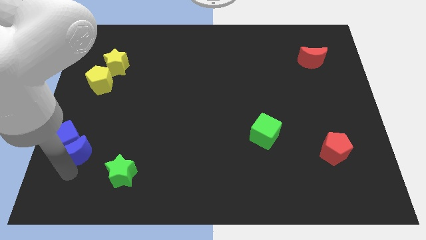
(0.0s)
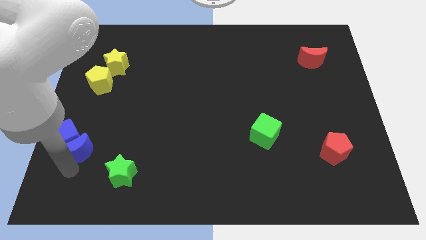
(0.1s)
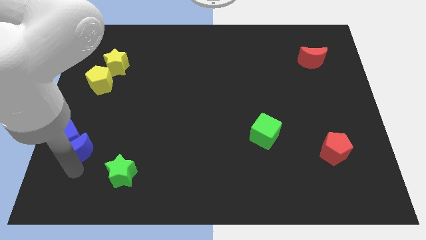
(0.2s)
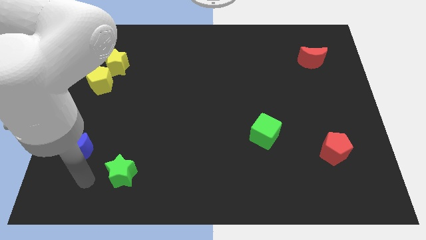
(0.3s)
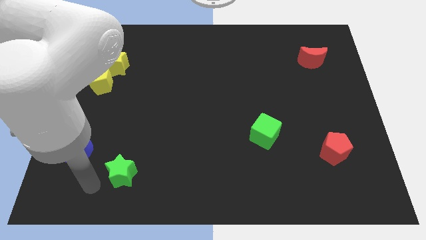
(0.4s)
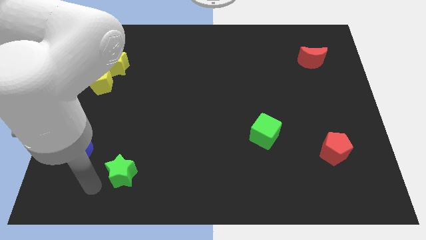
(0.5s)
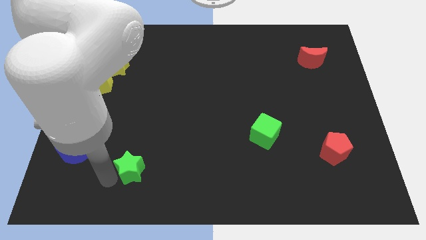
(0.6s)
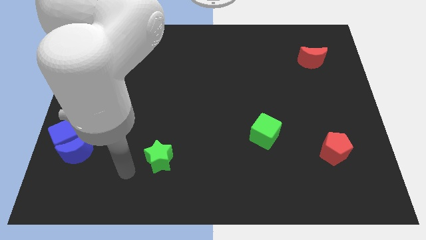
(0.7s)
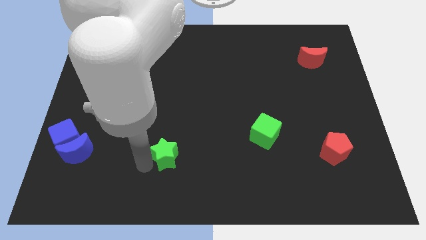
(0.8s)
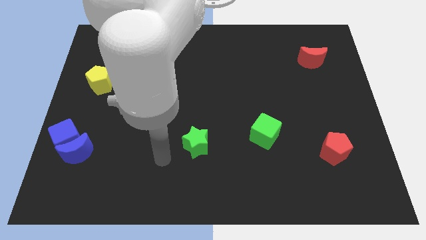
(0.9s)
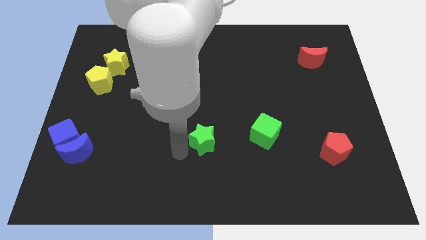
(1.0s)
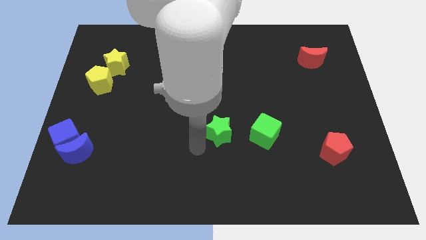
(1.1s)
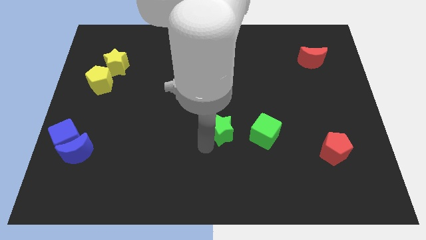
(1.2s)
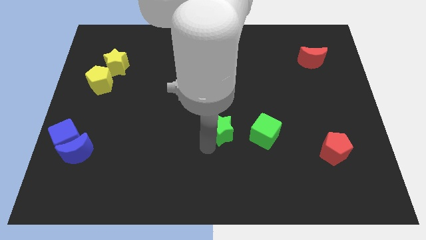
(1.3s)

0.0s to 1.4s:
move the green star left to the green cube

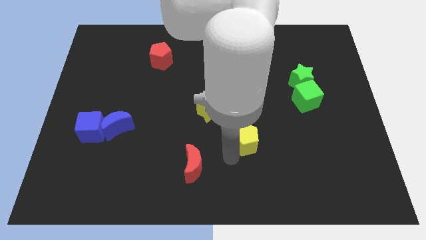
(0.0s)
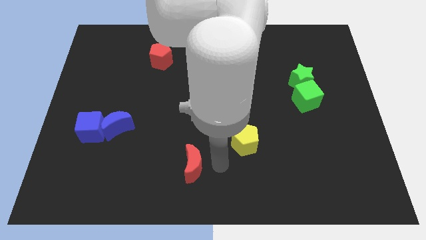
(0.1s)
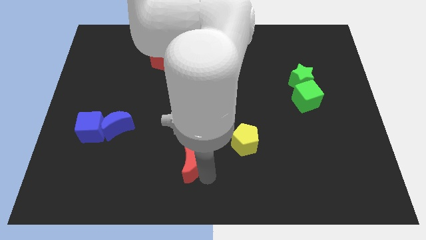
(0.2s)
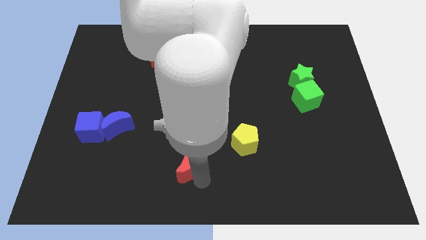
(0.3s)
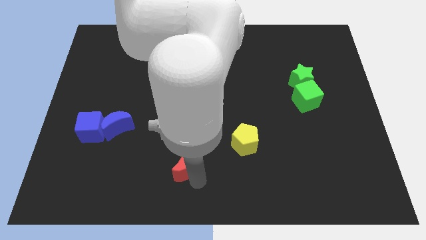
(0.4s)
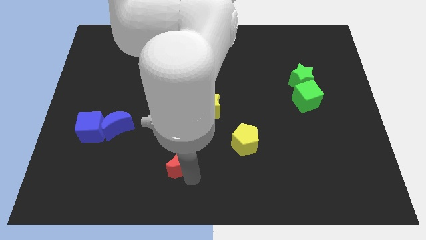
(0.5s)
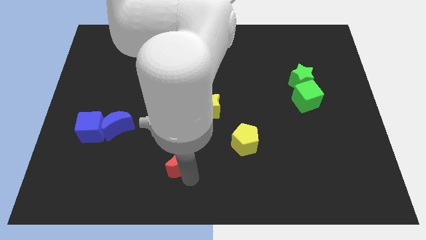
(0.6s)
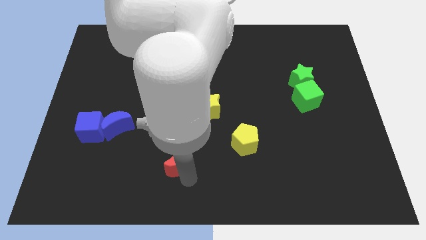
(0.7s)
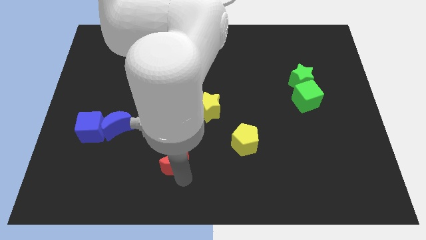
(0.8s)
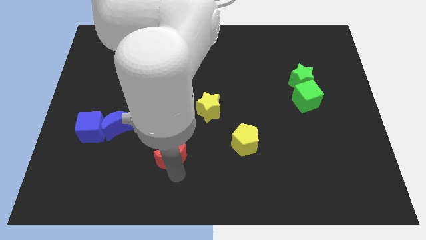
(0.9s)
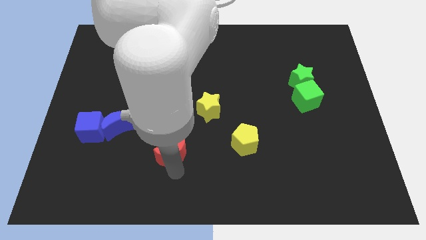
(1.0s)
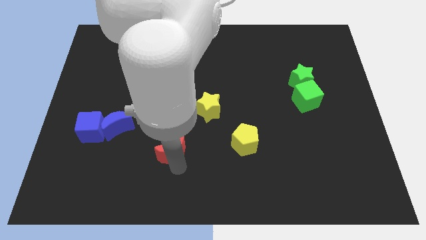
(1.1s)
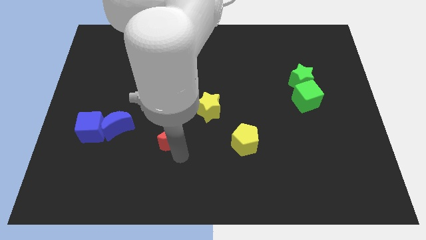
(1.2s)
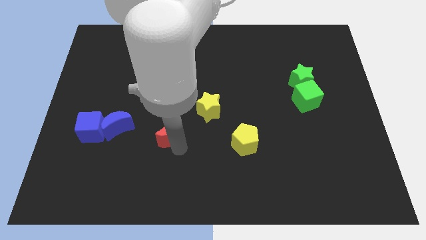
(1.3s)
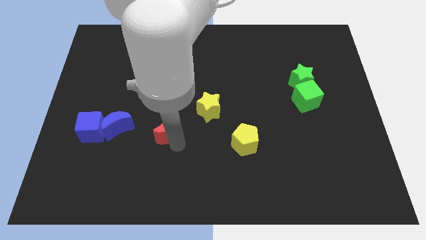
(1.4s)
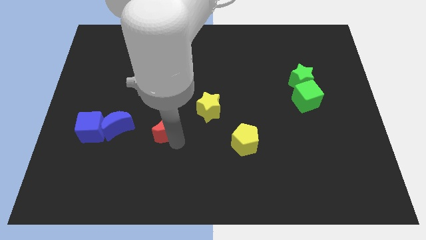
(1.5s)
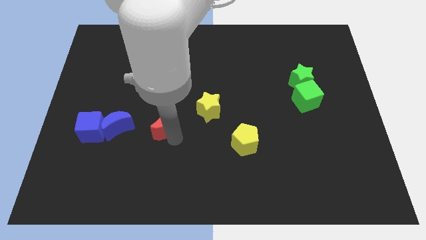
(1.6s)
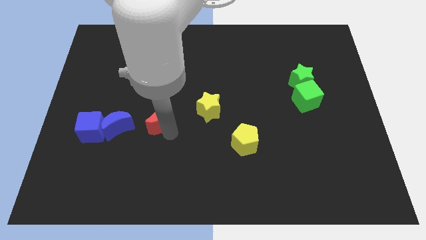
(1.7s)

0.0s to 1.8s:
place the red moon right to the blue moon

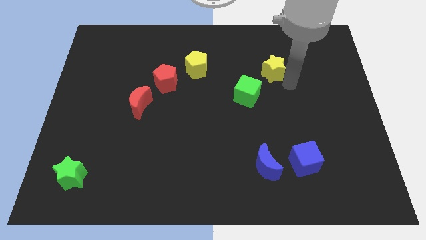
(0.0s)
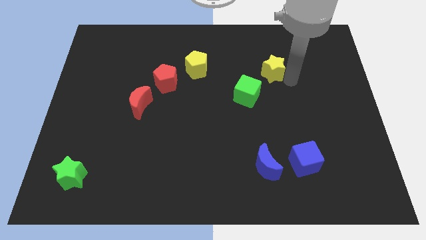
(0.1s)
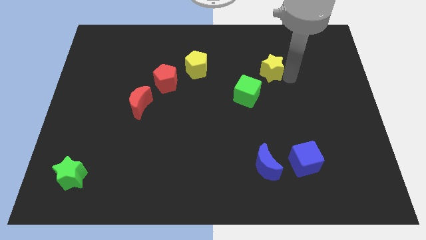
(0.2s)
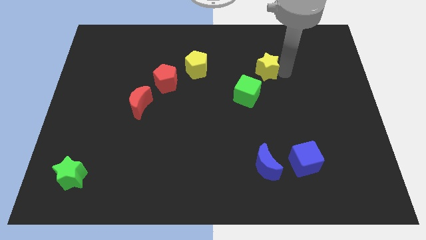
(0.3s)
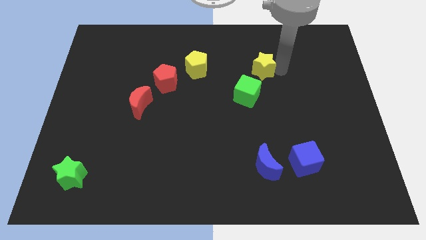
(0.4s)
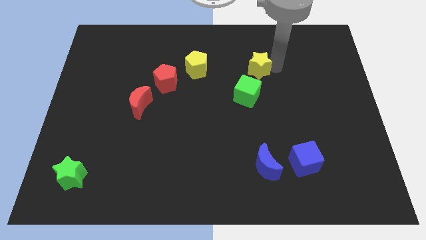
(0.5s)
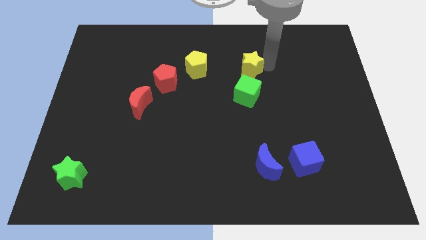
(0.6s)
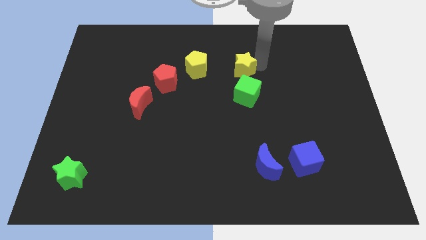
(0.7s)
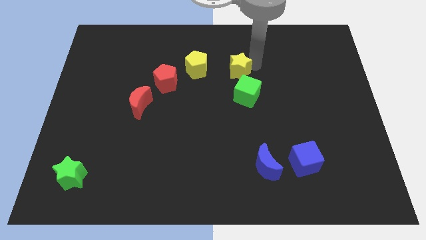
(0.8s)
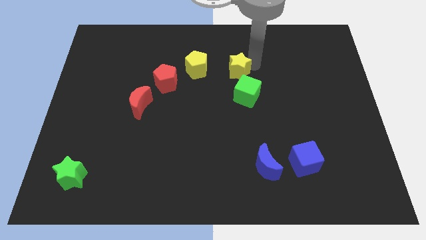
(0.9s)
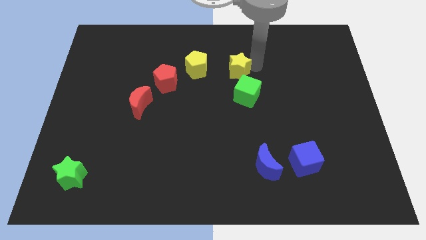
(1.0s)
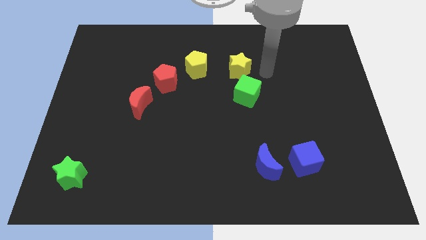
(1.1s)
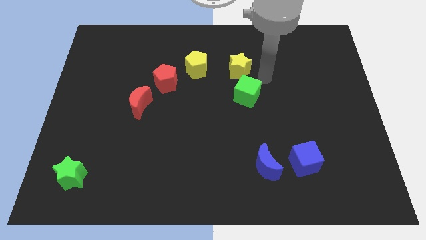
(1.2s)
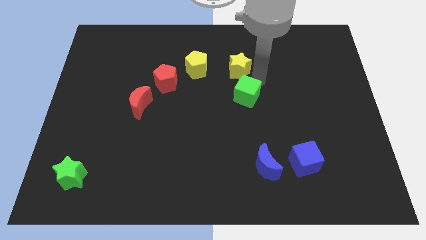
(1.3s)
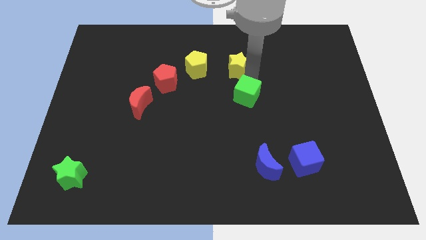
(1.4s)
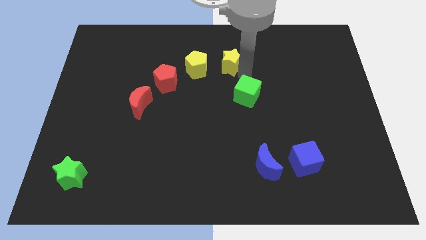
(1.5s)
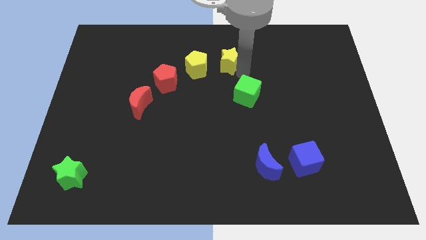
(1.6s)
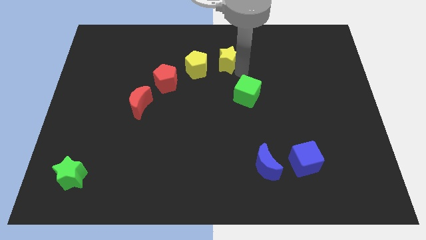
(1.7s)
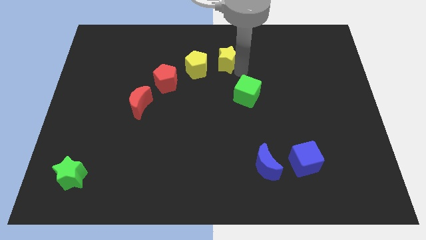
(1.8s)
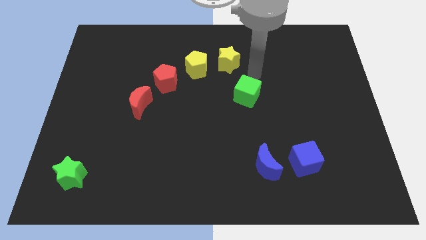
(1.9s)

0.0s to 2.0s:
move the yellow star to the right of the yellow pentagon

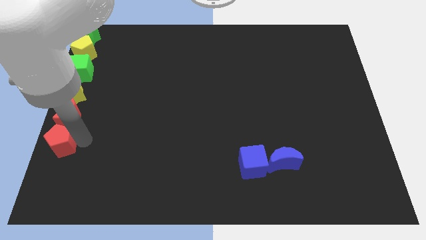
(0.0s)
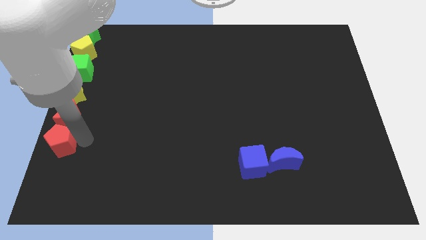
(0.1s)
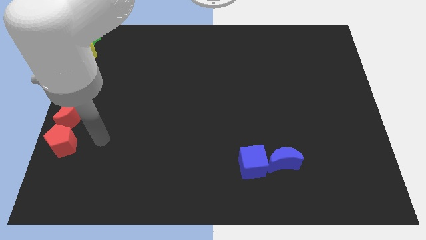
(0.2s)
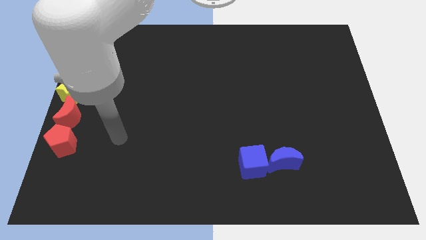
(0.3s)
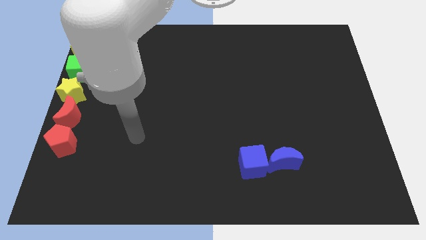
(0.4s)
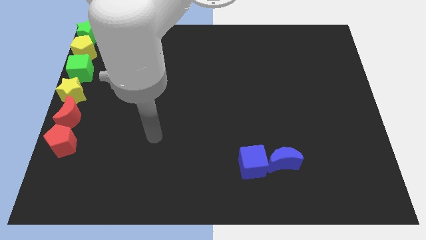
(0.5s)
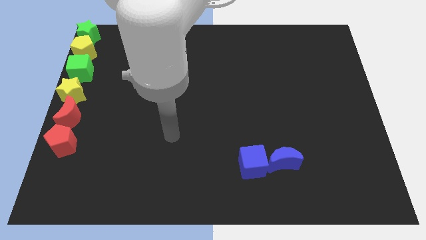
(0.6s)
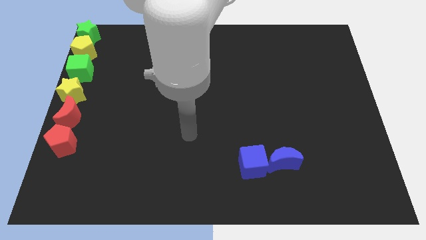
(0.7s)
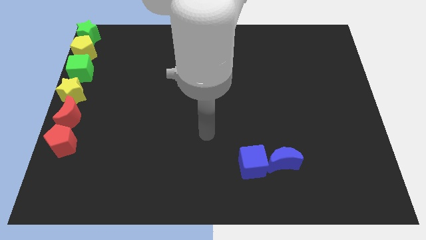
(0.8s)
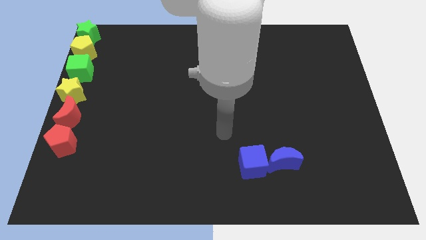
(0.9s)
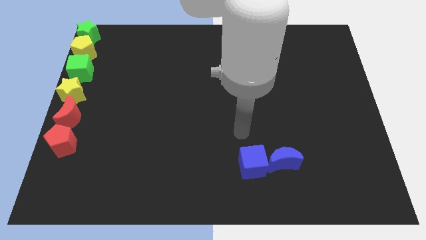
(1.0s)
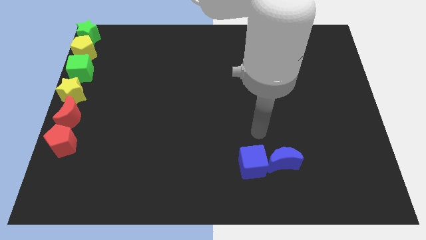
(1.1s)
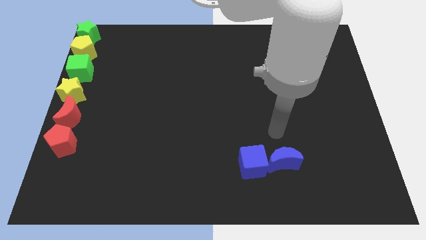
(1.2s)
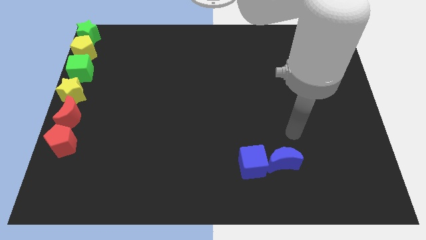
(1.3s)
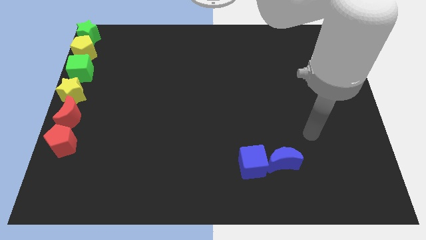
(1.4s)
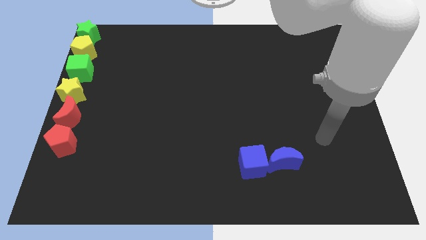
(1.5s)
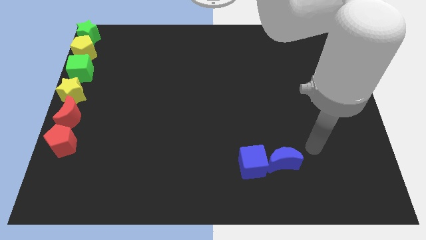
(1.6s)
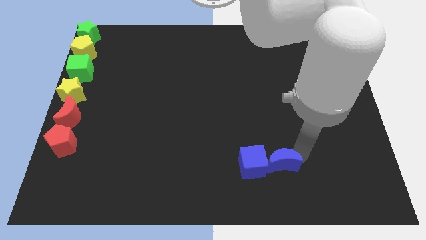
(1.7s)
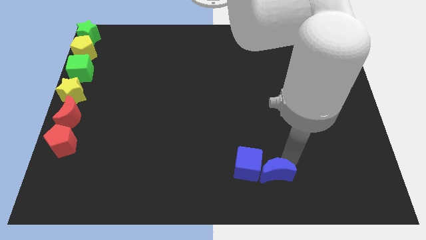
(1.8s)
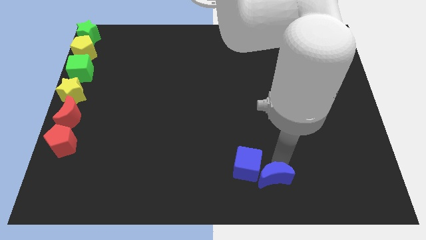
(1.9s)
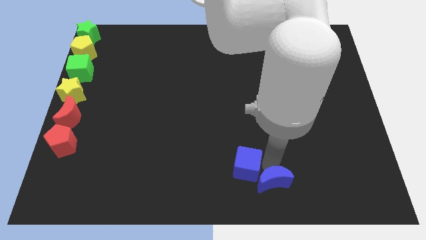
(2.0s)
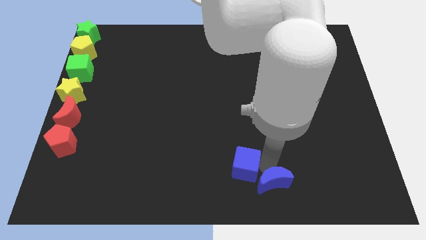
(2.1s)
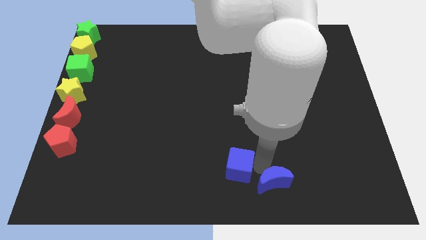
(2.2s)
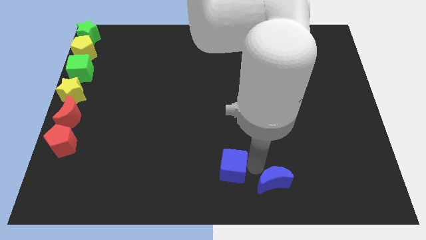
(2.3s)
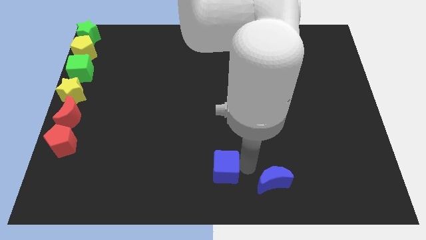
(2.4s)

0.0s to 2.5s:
move slightly blue crescent from blue cube

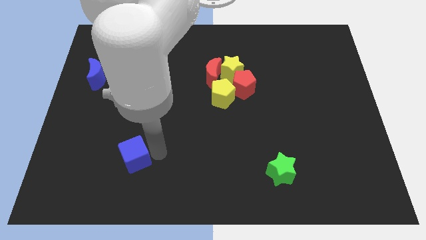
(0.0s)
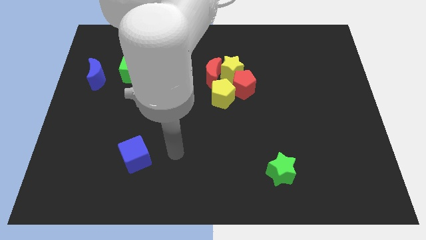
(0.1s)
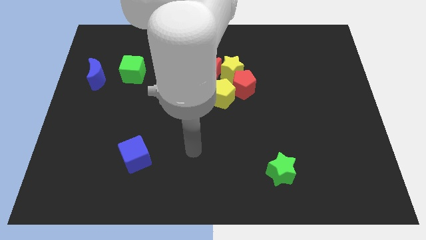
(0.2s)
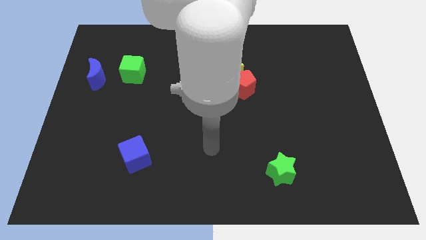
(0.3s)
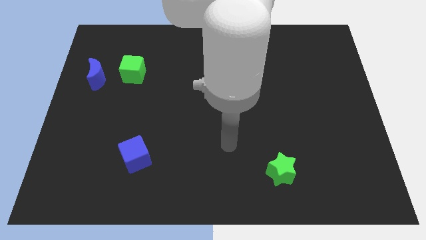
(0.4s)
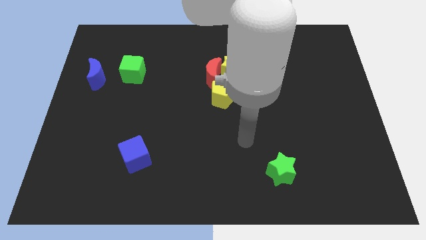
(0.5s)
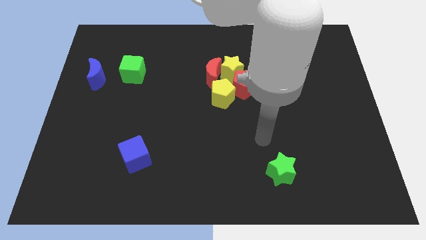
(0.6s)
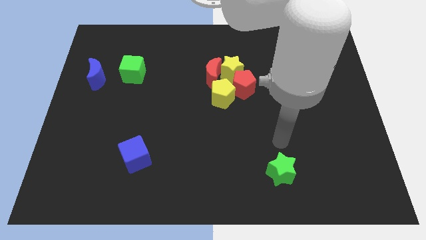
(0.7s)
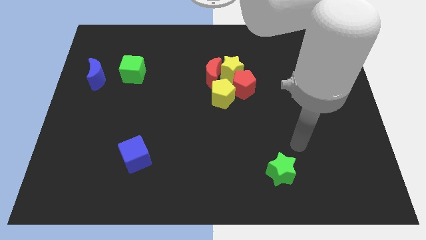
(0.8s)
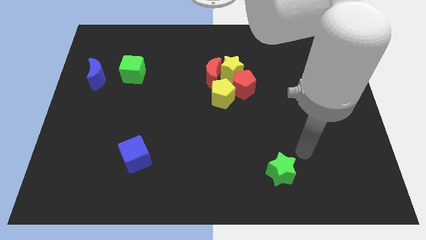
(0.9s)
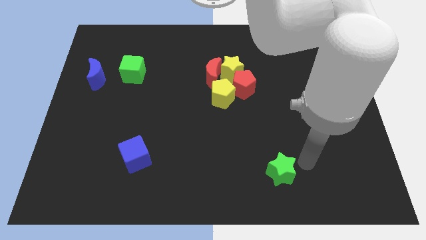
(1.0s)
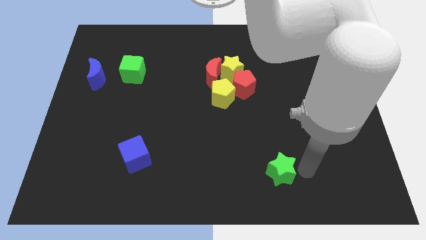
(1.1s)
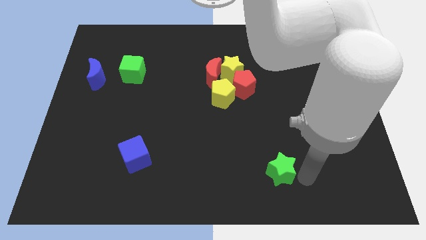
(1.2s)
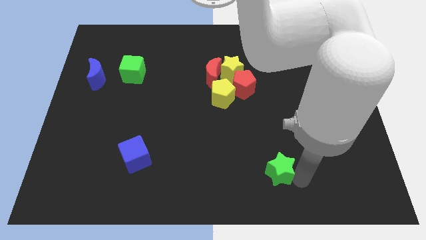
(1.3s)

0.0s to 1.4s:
place your arm at the right of the green star
